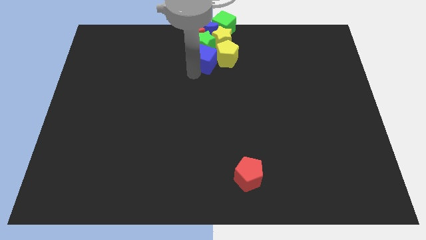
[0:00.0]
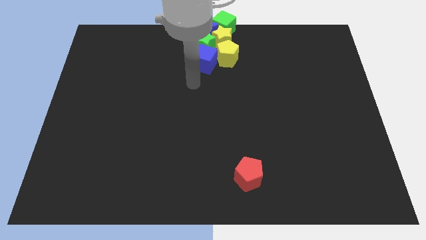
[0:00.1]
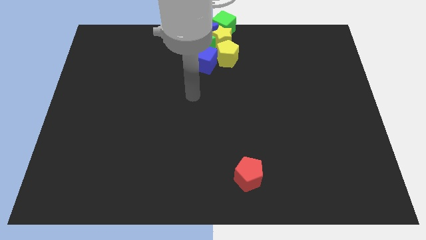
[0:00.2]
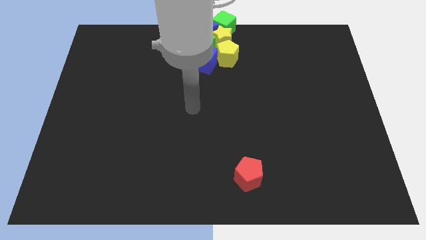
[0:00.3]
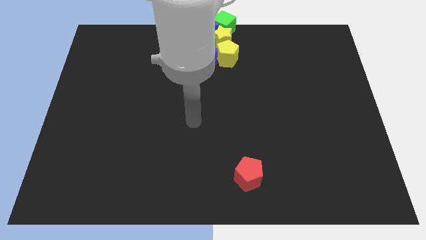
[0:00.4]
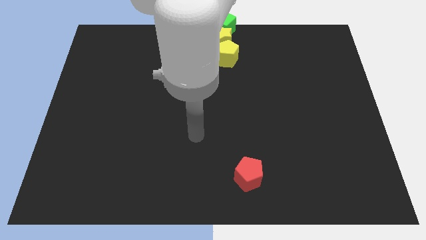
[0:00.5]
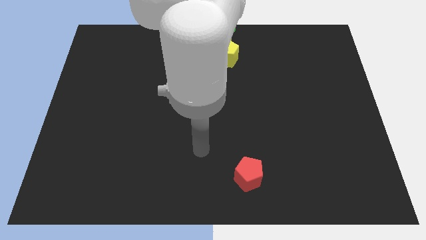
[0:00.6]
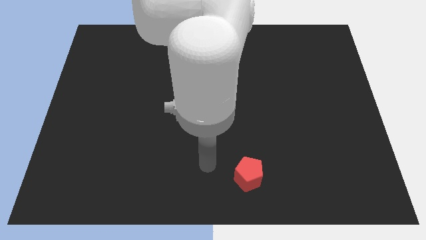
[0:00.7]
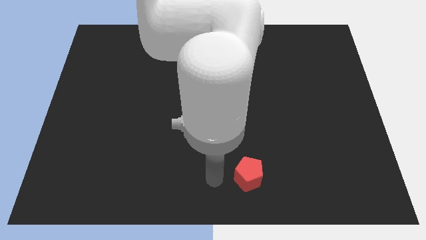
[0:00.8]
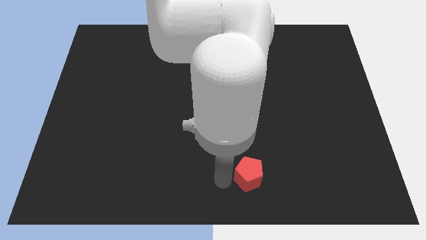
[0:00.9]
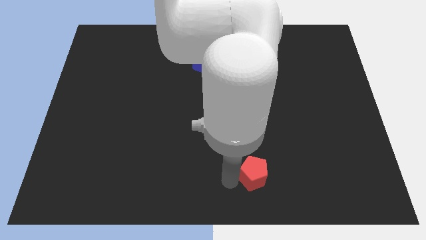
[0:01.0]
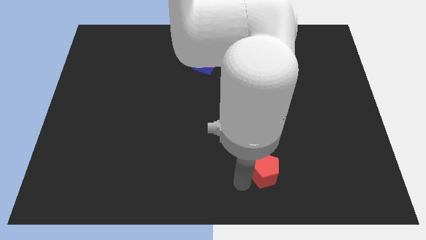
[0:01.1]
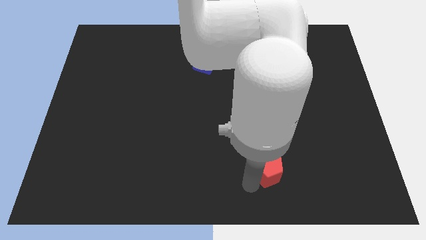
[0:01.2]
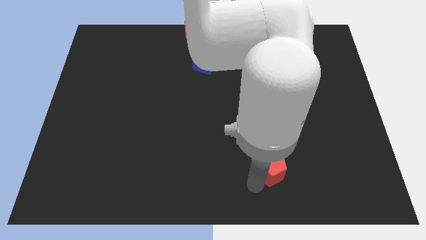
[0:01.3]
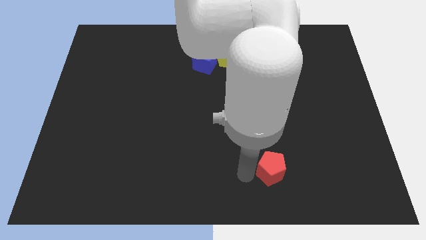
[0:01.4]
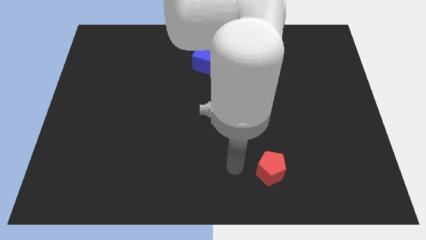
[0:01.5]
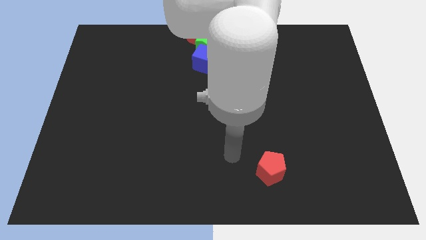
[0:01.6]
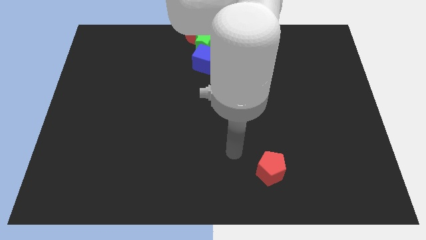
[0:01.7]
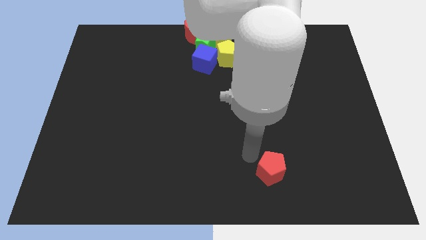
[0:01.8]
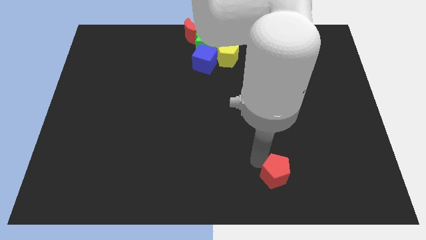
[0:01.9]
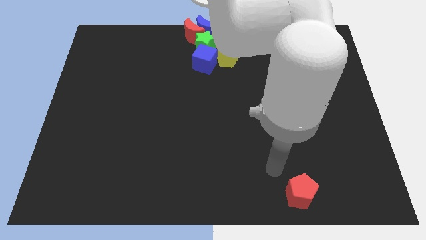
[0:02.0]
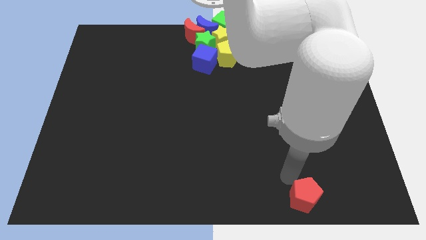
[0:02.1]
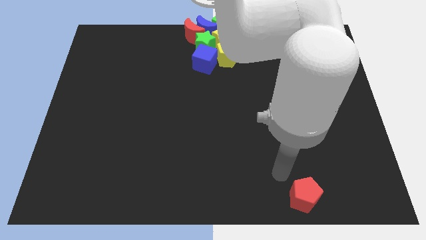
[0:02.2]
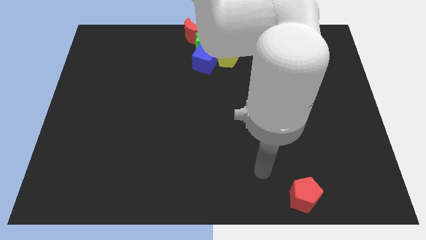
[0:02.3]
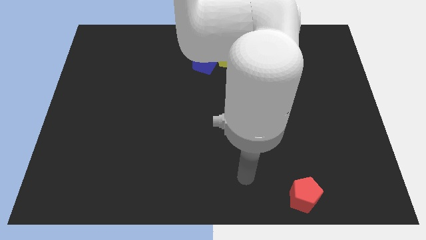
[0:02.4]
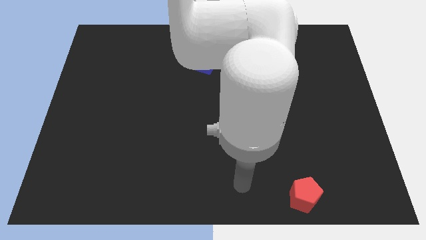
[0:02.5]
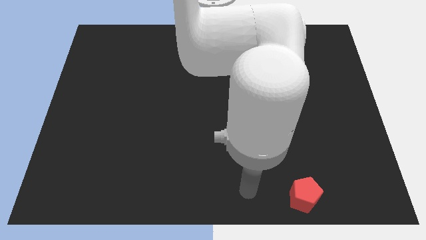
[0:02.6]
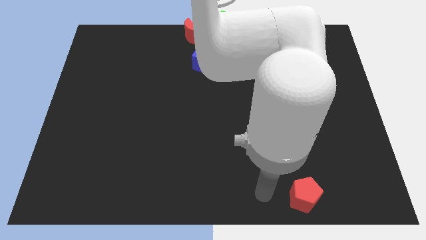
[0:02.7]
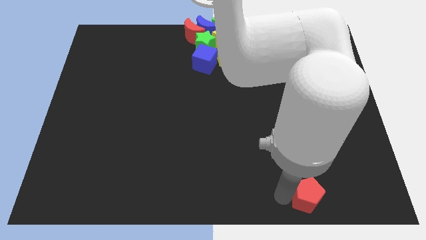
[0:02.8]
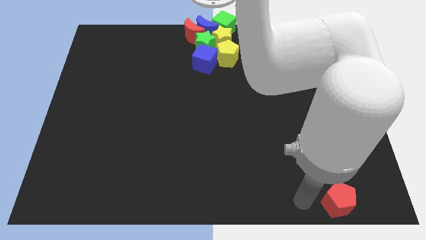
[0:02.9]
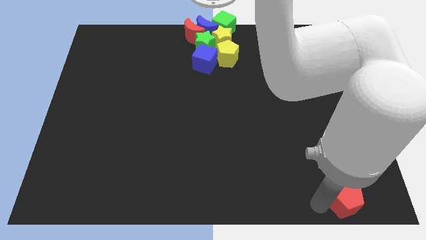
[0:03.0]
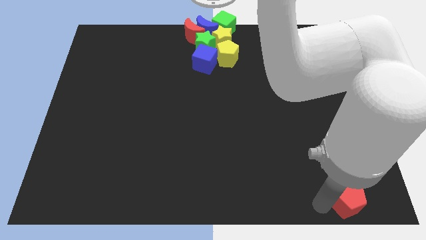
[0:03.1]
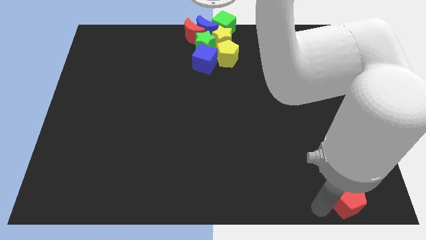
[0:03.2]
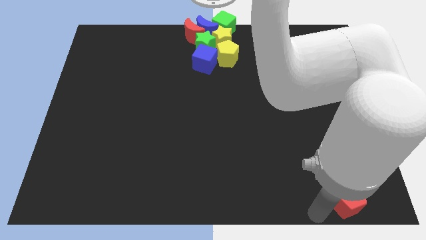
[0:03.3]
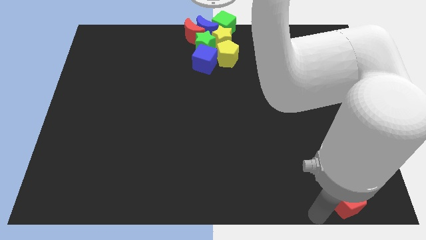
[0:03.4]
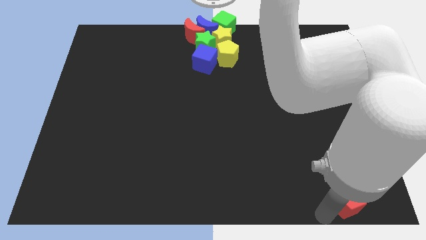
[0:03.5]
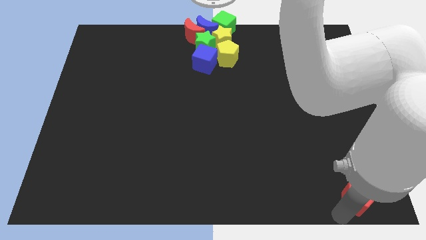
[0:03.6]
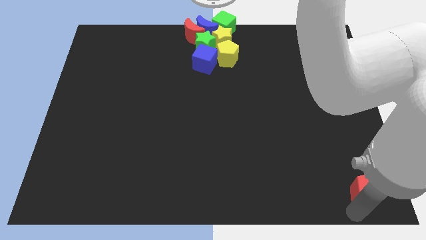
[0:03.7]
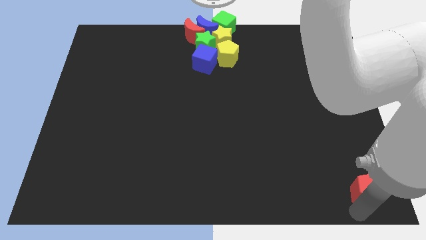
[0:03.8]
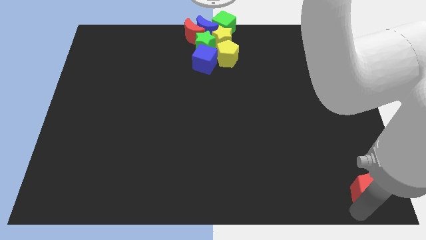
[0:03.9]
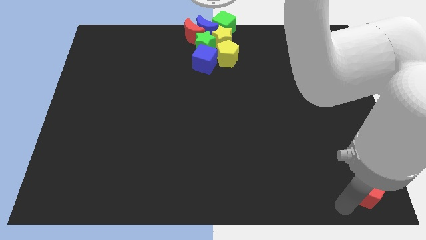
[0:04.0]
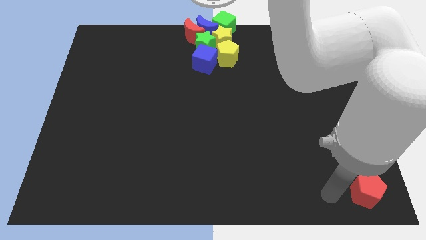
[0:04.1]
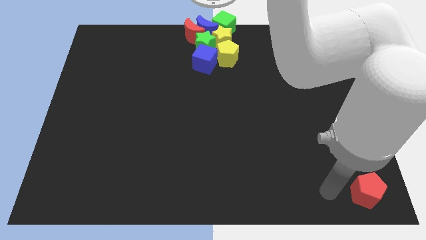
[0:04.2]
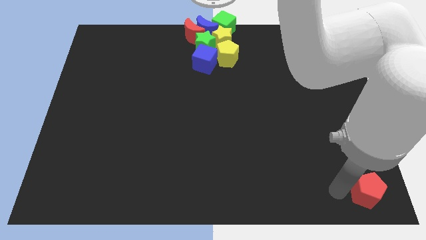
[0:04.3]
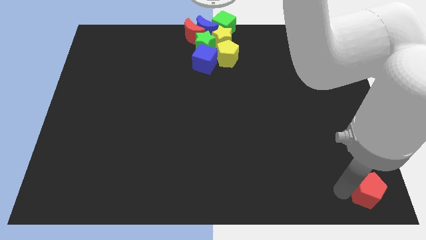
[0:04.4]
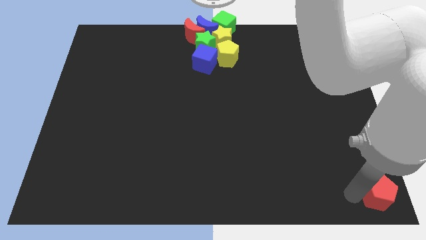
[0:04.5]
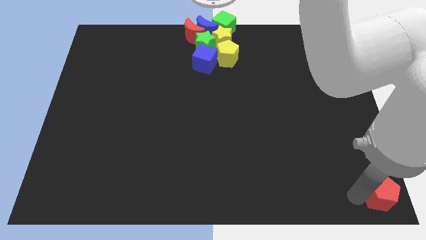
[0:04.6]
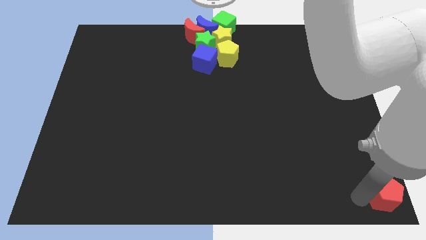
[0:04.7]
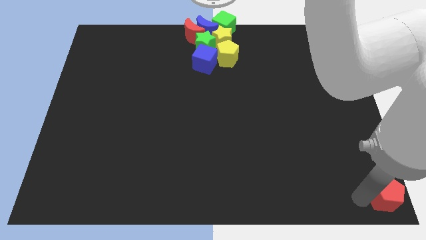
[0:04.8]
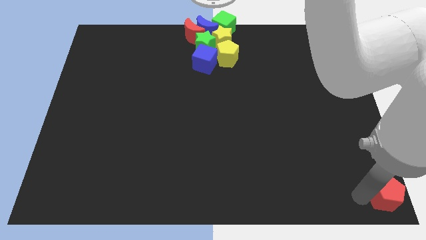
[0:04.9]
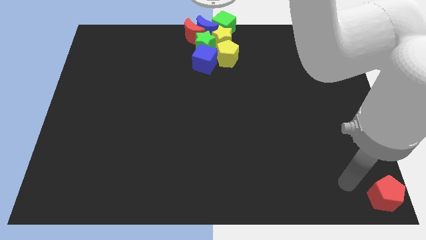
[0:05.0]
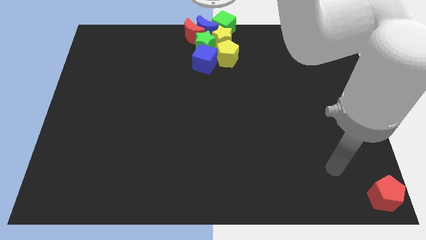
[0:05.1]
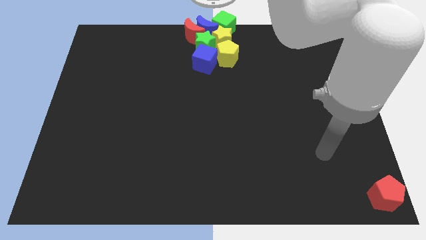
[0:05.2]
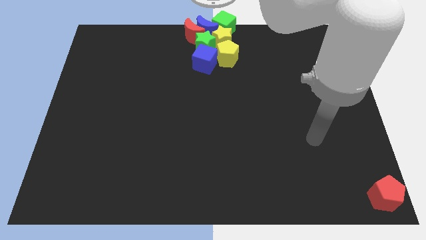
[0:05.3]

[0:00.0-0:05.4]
place the red pentagon at the bottom right corner of the board

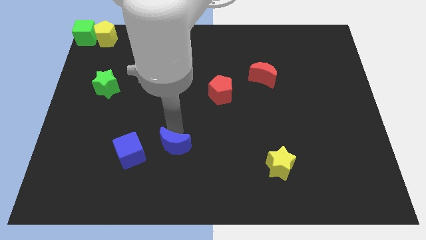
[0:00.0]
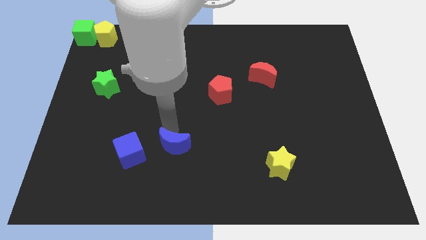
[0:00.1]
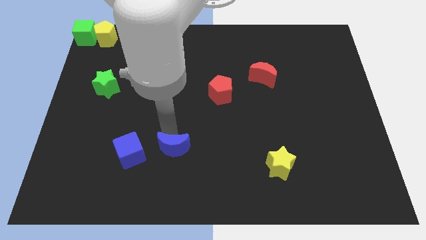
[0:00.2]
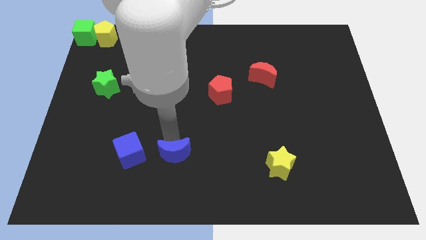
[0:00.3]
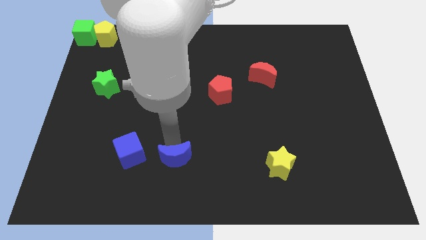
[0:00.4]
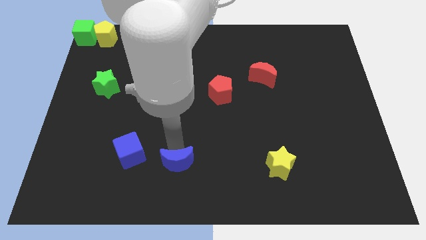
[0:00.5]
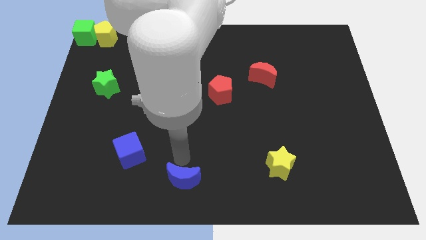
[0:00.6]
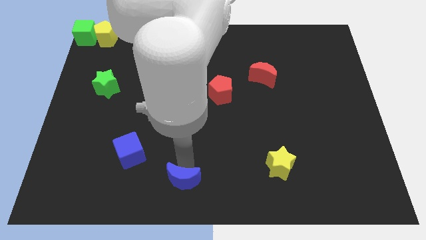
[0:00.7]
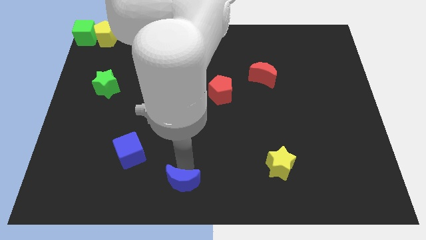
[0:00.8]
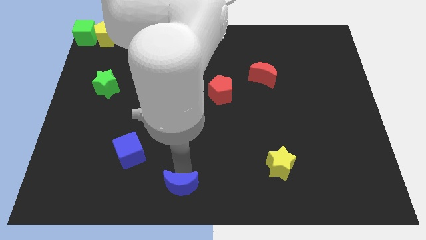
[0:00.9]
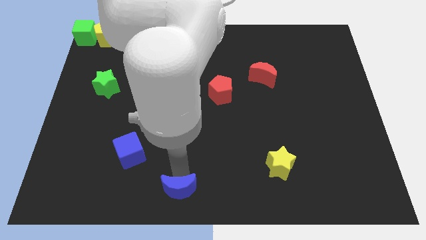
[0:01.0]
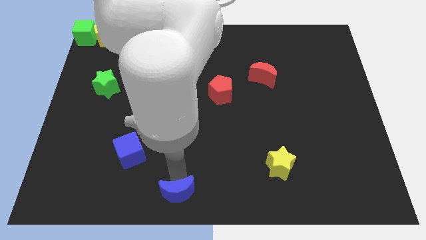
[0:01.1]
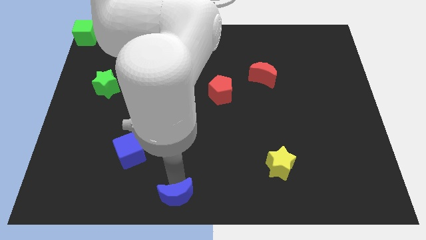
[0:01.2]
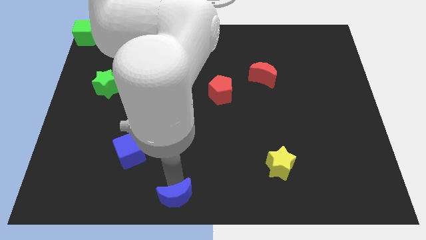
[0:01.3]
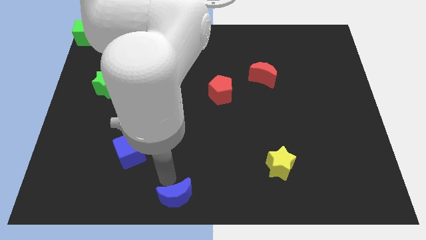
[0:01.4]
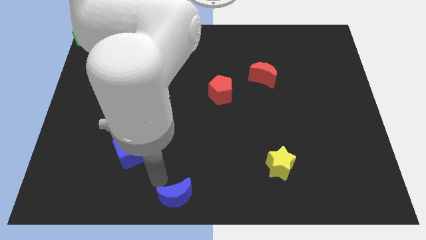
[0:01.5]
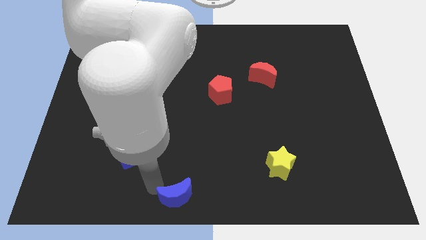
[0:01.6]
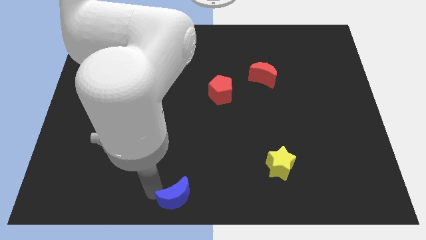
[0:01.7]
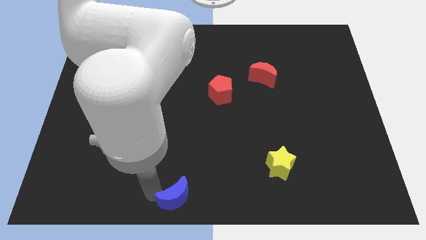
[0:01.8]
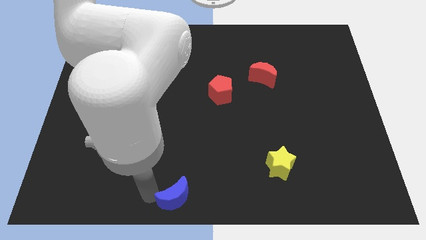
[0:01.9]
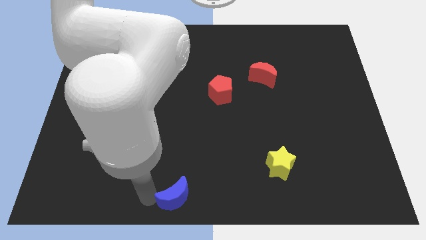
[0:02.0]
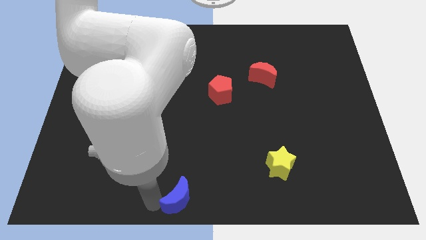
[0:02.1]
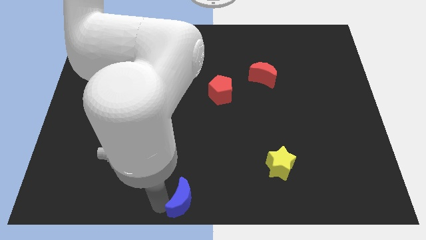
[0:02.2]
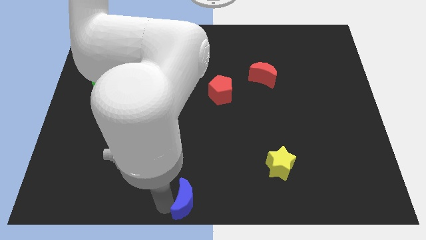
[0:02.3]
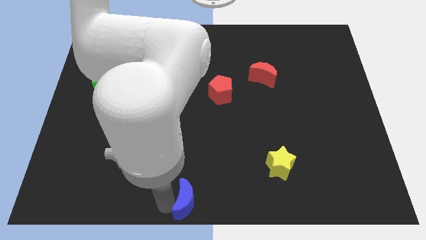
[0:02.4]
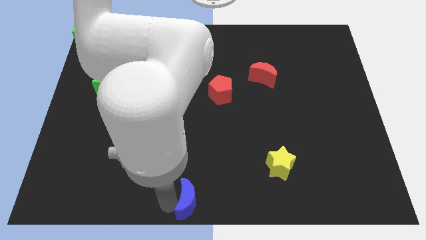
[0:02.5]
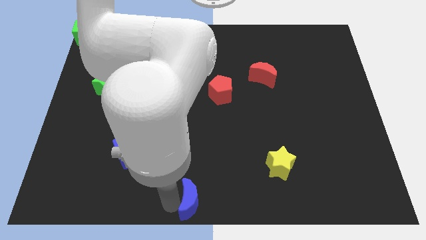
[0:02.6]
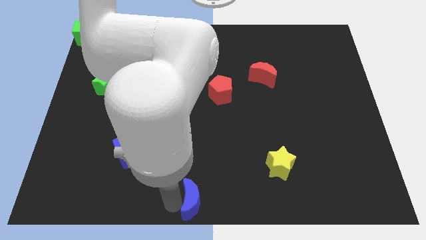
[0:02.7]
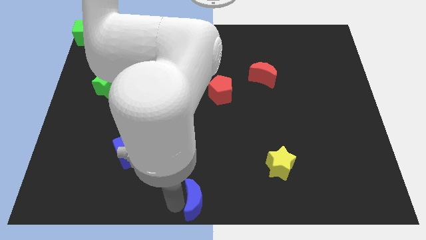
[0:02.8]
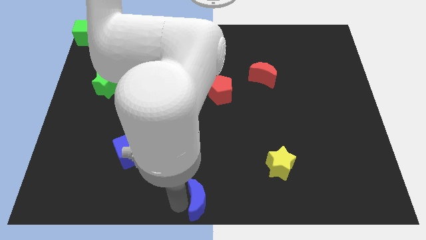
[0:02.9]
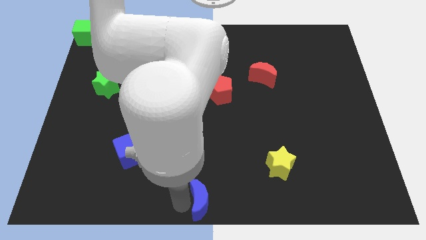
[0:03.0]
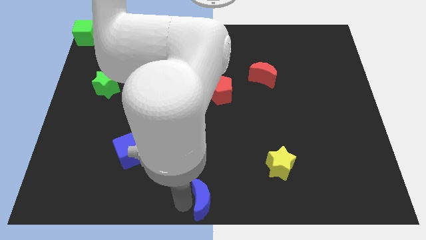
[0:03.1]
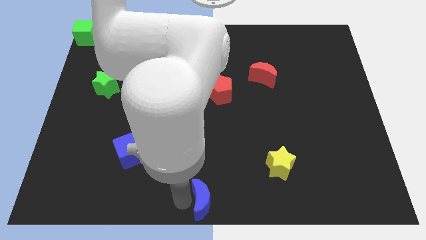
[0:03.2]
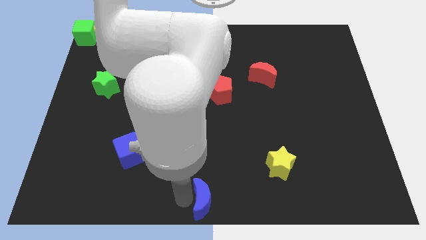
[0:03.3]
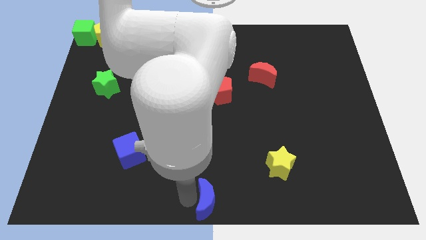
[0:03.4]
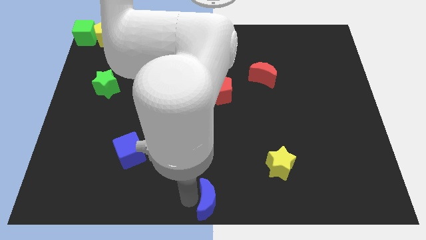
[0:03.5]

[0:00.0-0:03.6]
move the blue moon to the bottom center below red pentagon
